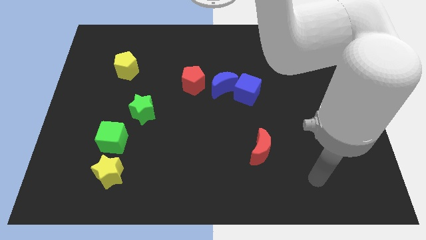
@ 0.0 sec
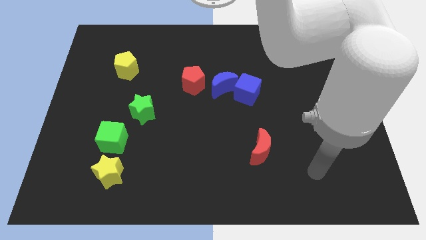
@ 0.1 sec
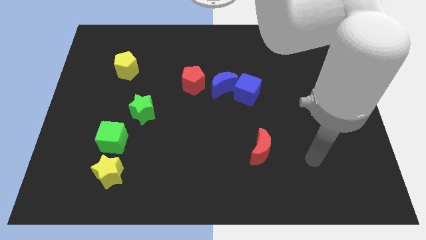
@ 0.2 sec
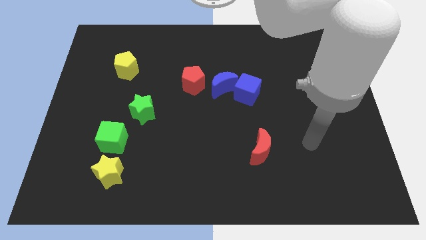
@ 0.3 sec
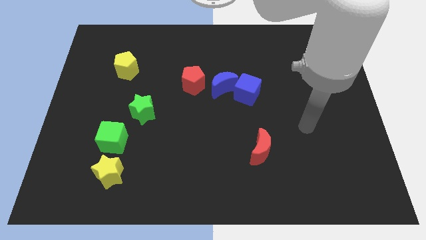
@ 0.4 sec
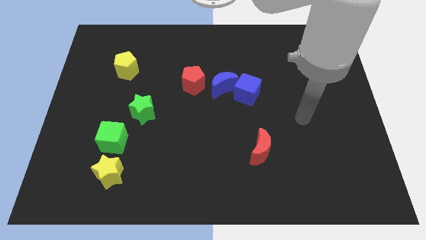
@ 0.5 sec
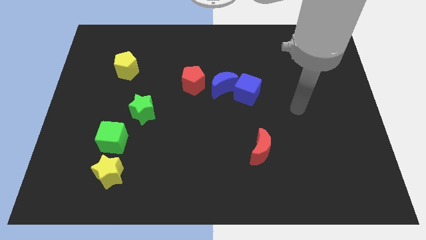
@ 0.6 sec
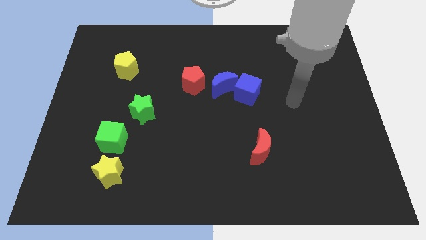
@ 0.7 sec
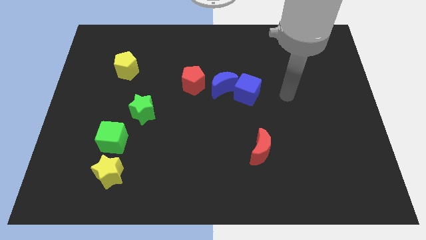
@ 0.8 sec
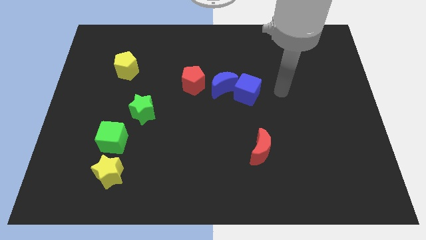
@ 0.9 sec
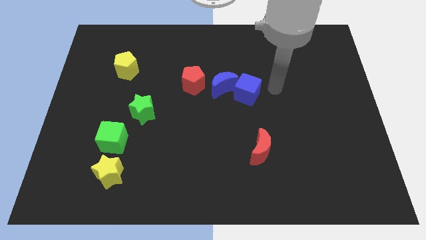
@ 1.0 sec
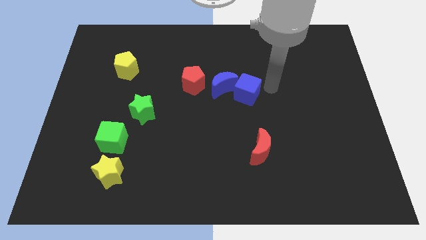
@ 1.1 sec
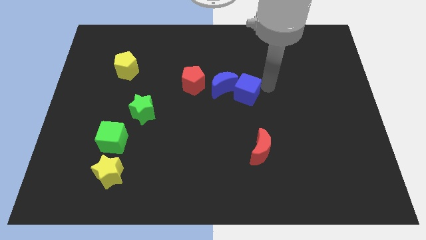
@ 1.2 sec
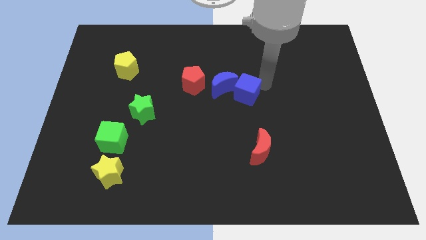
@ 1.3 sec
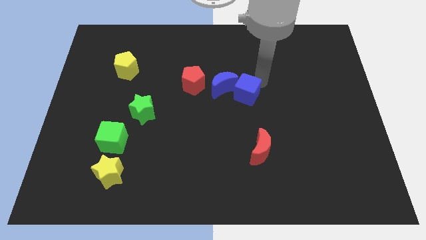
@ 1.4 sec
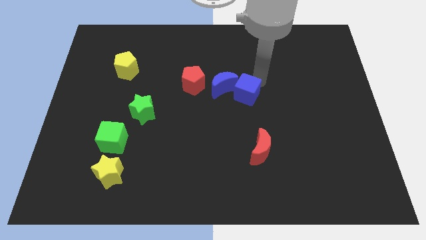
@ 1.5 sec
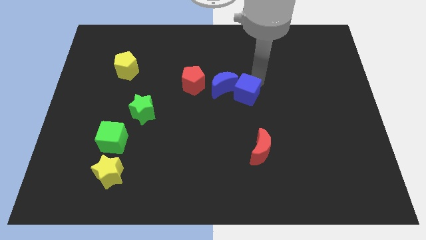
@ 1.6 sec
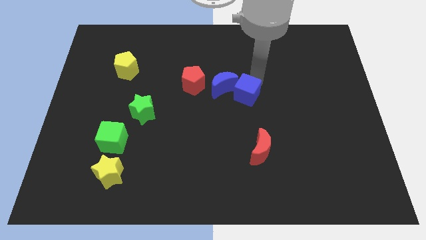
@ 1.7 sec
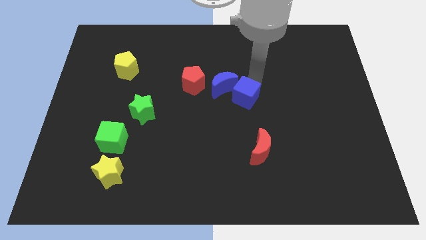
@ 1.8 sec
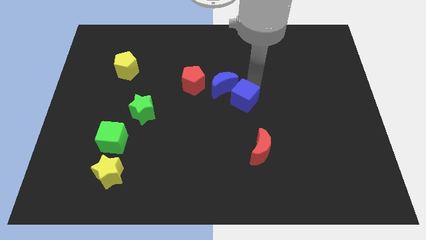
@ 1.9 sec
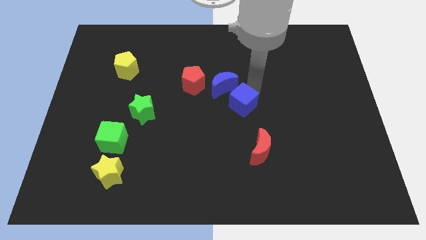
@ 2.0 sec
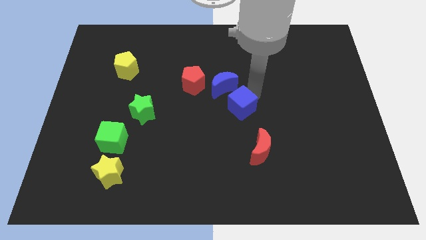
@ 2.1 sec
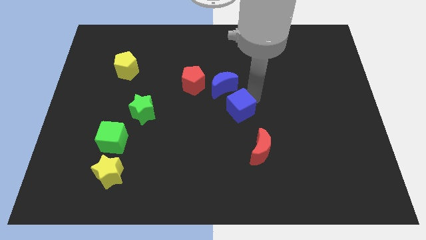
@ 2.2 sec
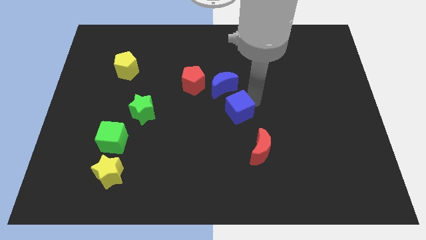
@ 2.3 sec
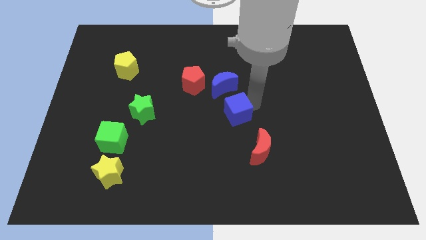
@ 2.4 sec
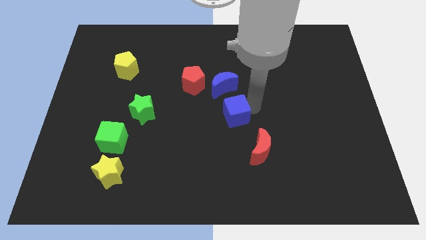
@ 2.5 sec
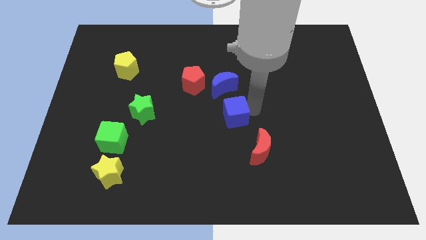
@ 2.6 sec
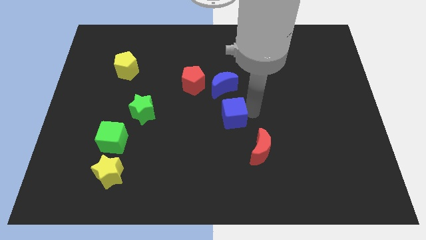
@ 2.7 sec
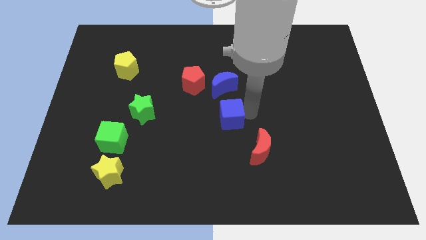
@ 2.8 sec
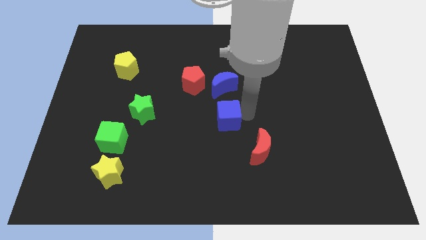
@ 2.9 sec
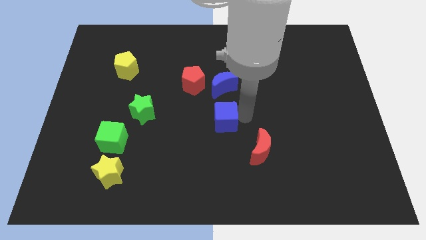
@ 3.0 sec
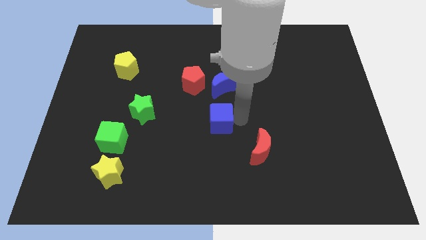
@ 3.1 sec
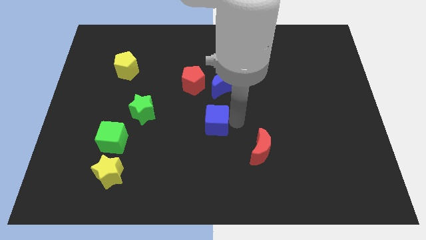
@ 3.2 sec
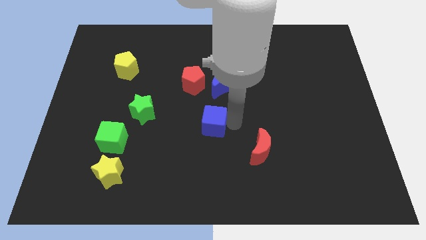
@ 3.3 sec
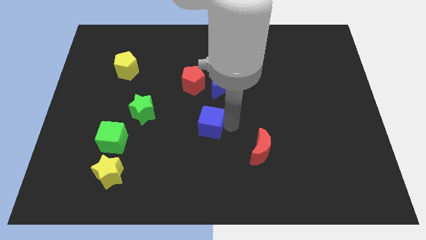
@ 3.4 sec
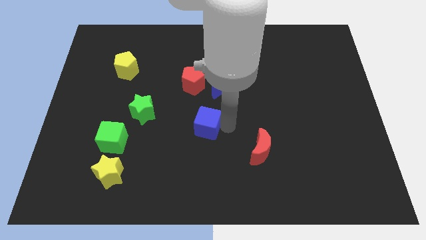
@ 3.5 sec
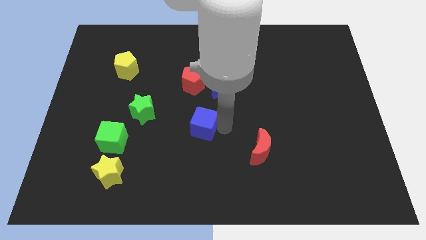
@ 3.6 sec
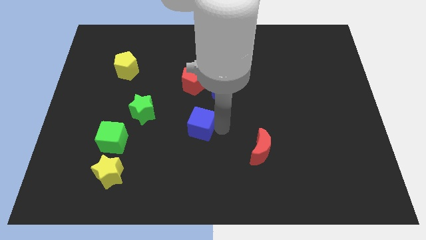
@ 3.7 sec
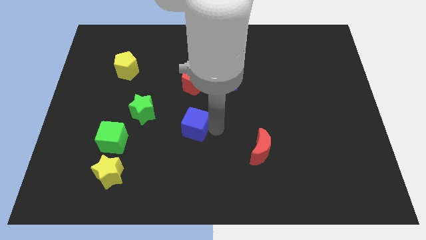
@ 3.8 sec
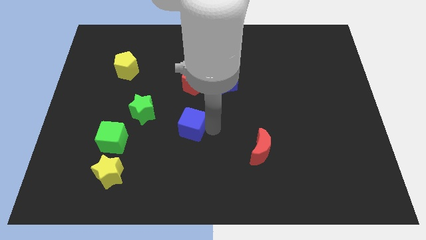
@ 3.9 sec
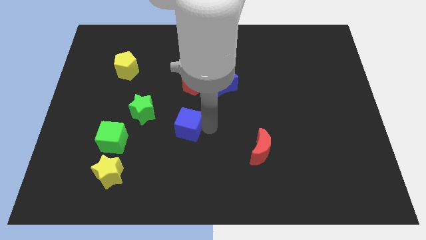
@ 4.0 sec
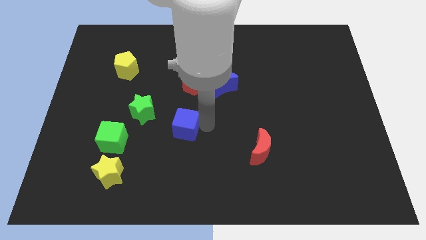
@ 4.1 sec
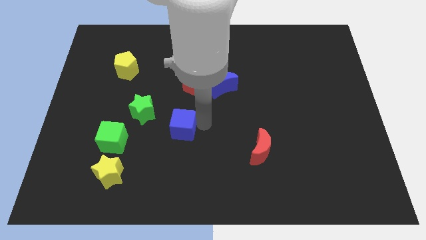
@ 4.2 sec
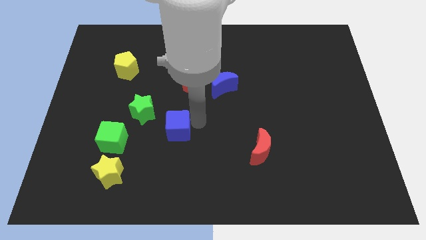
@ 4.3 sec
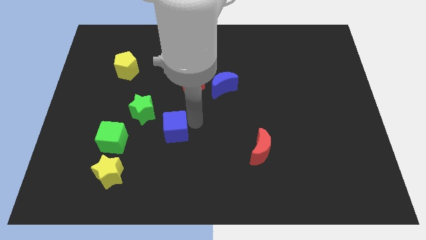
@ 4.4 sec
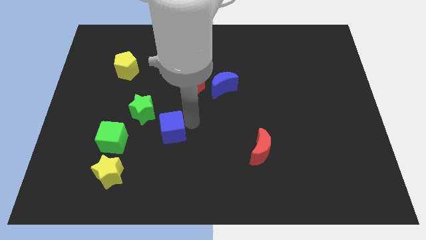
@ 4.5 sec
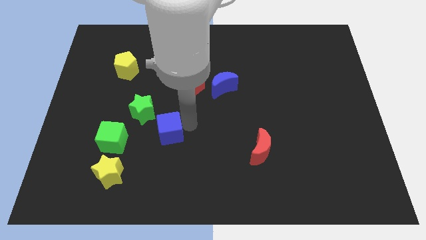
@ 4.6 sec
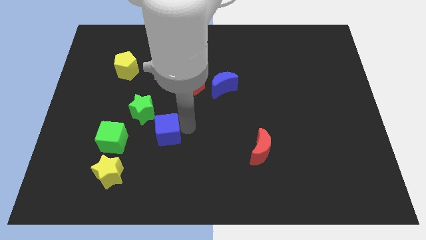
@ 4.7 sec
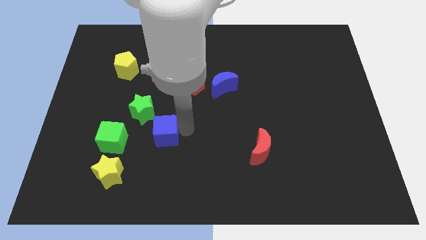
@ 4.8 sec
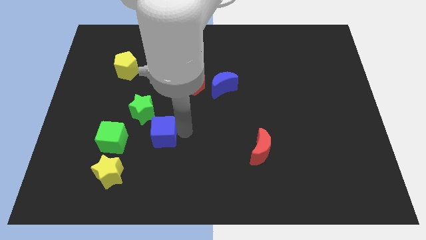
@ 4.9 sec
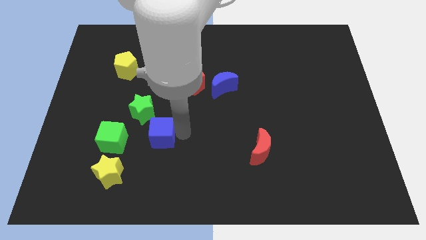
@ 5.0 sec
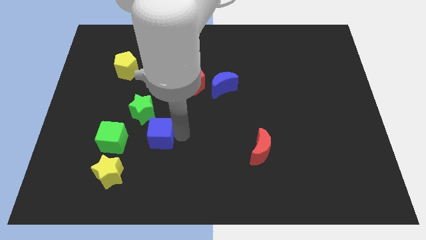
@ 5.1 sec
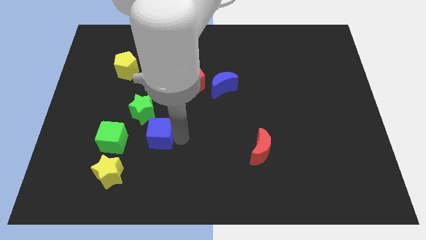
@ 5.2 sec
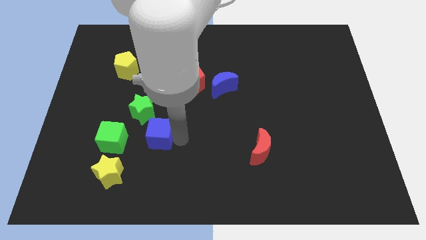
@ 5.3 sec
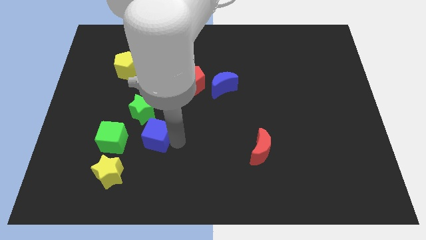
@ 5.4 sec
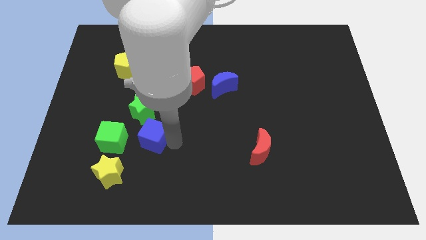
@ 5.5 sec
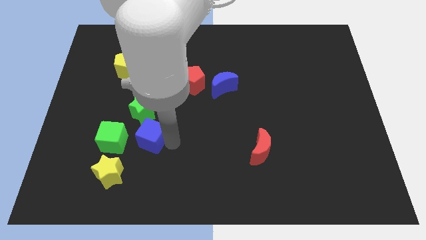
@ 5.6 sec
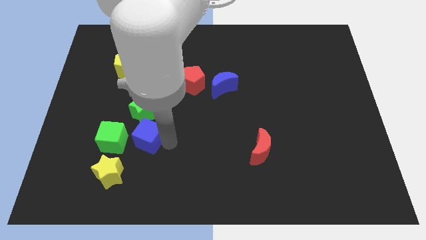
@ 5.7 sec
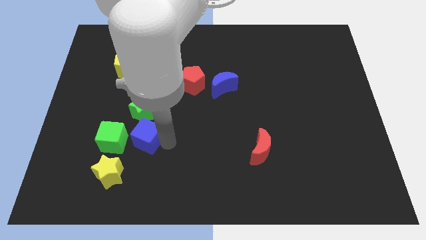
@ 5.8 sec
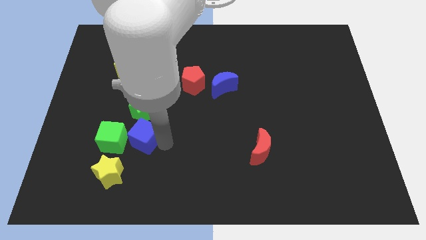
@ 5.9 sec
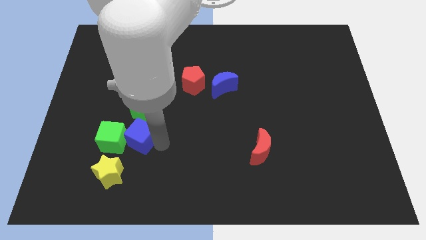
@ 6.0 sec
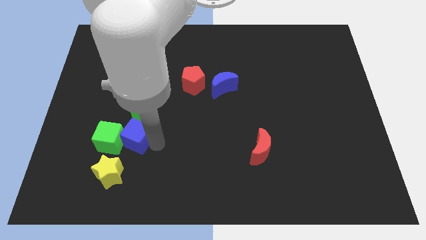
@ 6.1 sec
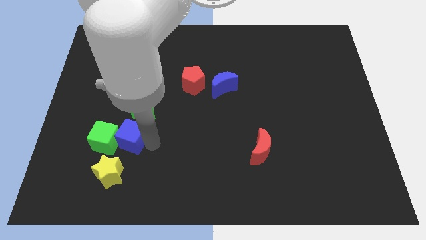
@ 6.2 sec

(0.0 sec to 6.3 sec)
put the blue cube next to the green cube

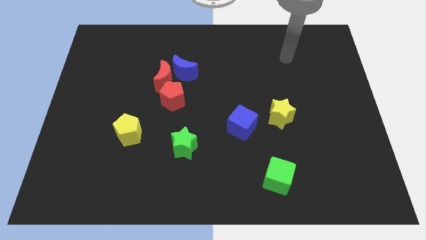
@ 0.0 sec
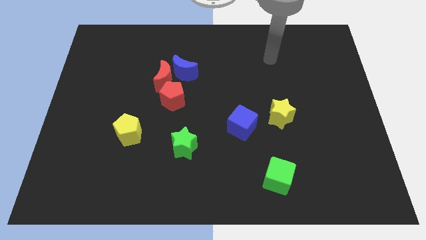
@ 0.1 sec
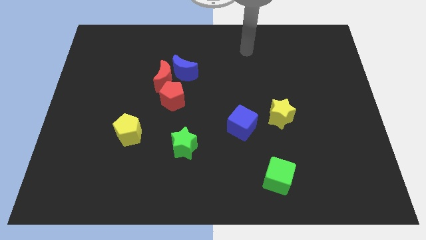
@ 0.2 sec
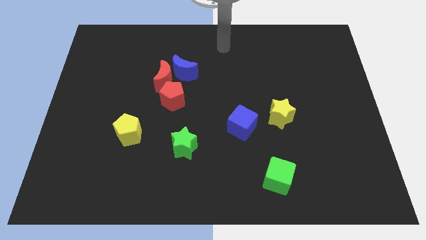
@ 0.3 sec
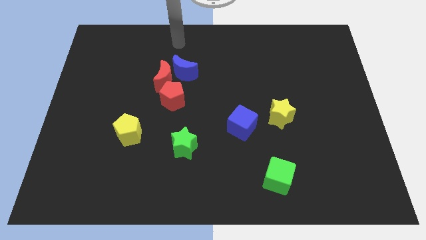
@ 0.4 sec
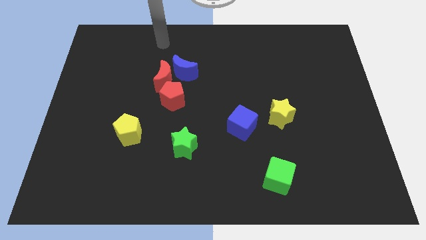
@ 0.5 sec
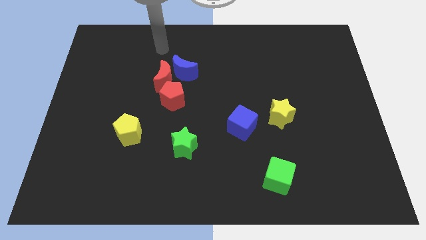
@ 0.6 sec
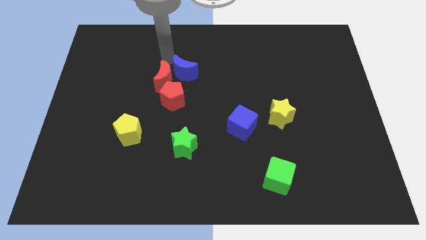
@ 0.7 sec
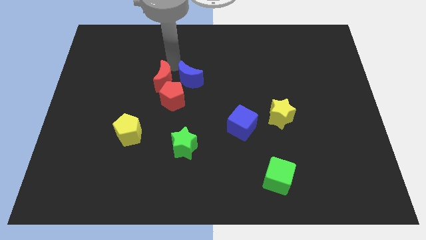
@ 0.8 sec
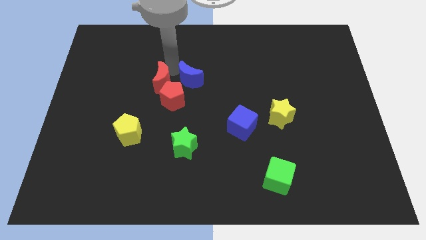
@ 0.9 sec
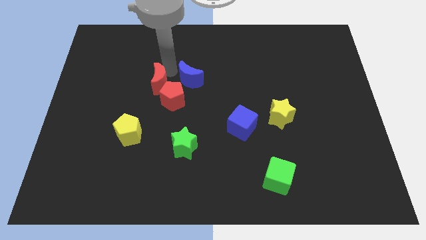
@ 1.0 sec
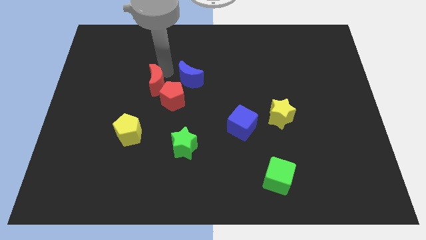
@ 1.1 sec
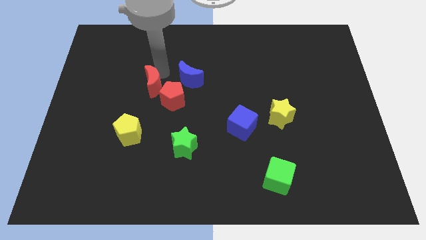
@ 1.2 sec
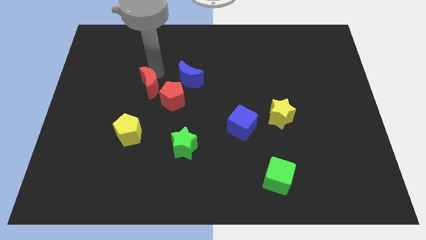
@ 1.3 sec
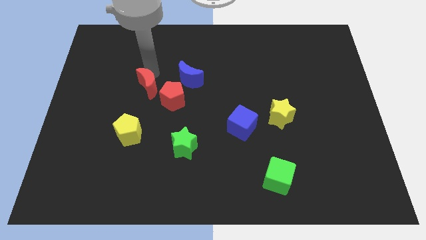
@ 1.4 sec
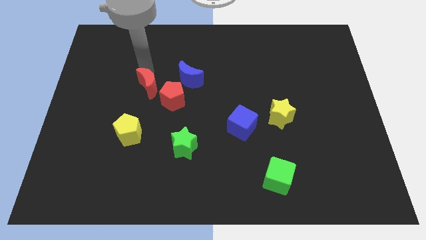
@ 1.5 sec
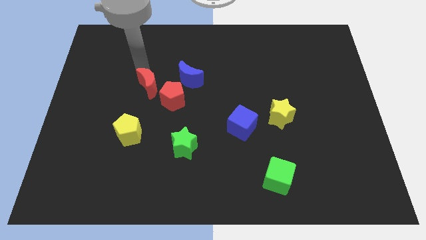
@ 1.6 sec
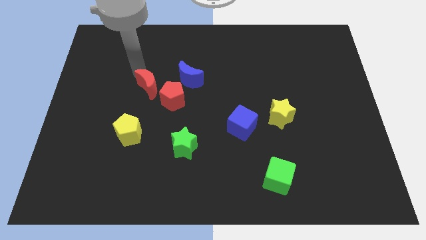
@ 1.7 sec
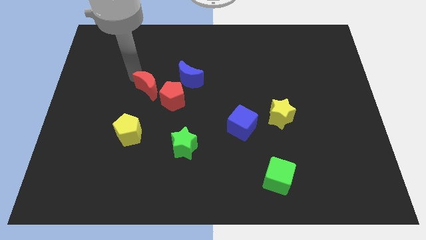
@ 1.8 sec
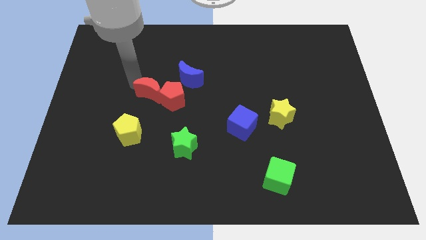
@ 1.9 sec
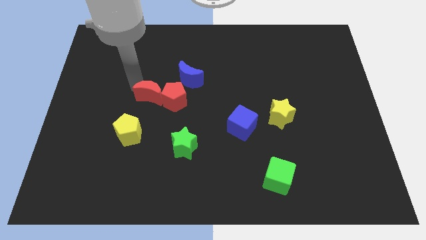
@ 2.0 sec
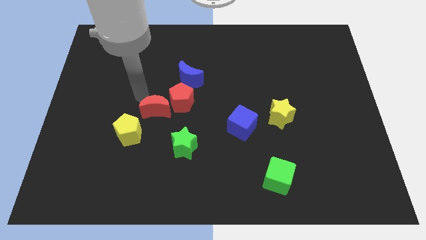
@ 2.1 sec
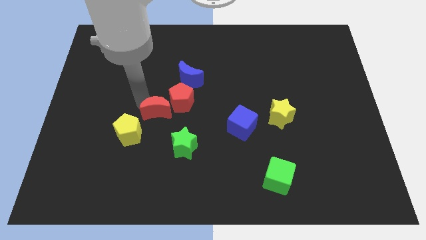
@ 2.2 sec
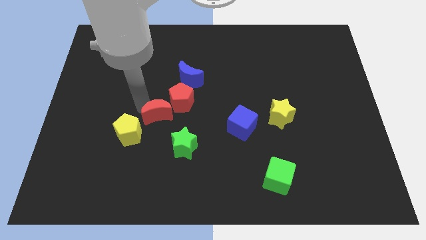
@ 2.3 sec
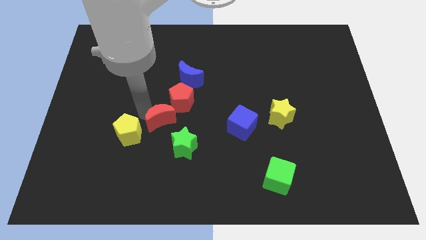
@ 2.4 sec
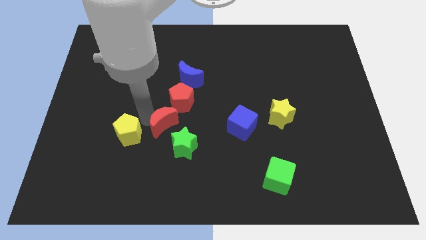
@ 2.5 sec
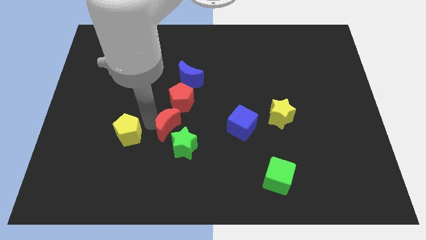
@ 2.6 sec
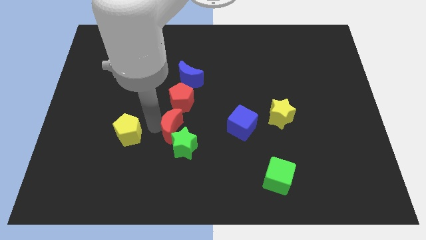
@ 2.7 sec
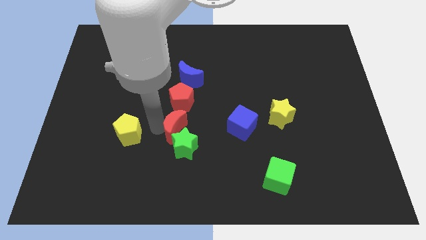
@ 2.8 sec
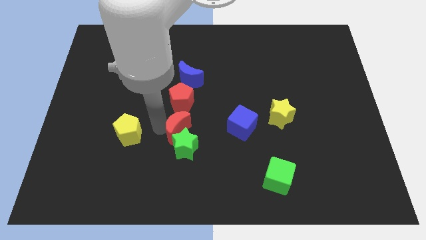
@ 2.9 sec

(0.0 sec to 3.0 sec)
move the red moon towards the green star
